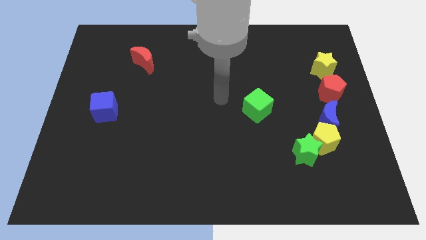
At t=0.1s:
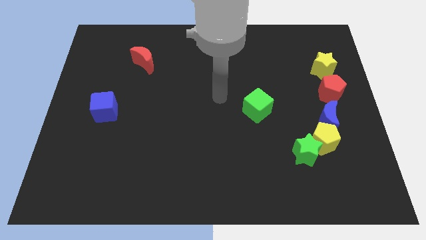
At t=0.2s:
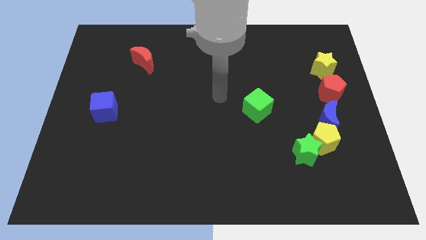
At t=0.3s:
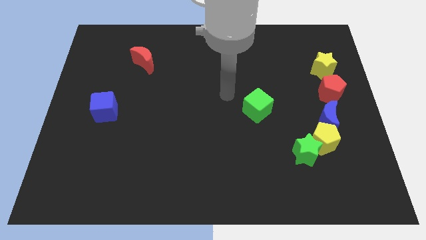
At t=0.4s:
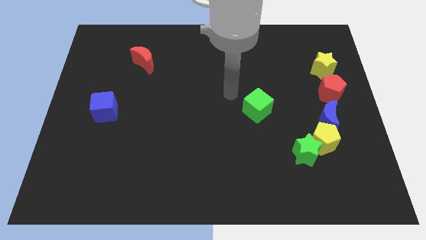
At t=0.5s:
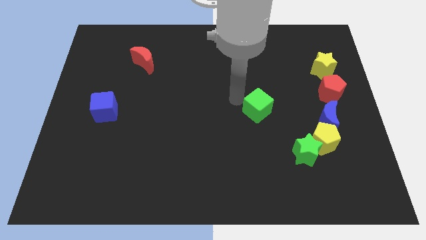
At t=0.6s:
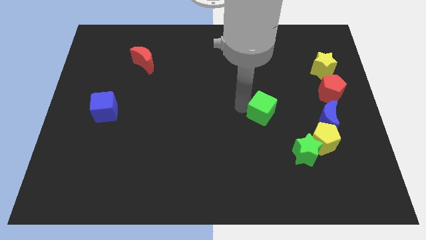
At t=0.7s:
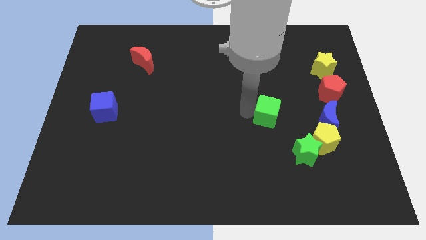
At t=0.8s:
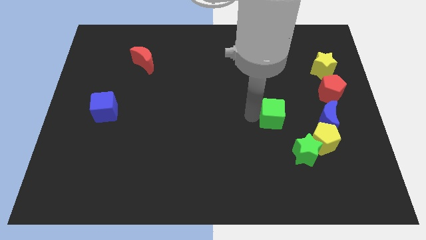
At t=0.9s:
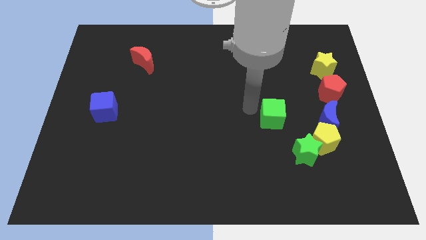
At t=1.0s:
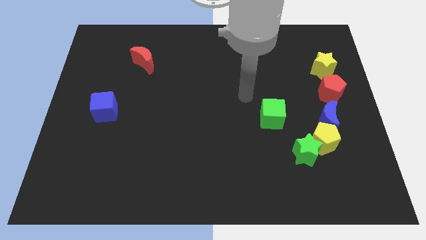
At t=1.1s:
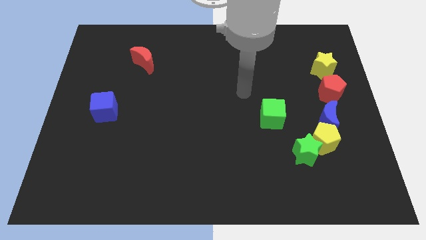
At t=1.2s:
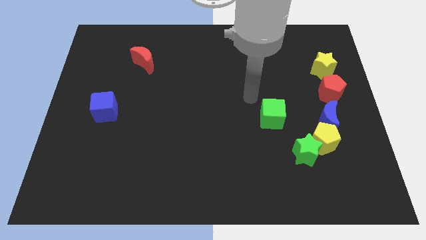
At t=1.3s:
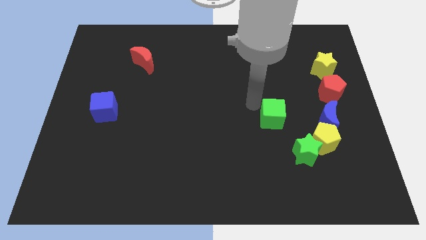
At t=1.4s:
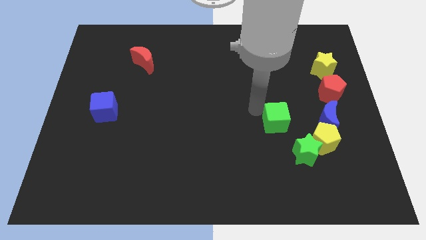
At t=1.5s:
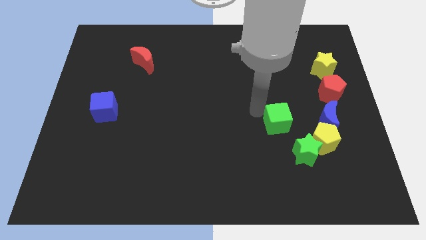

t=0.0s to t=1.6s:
place the green cube diagonally above the top left side of the green star

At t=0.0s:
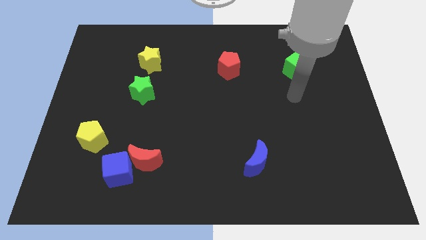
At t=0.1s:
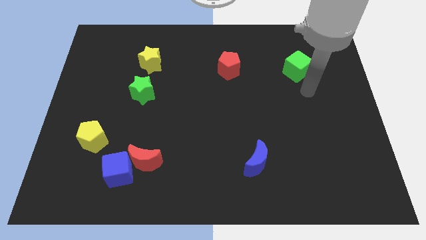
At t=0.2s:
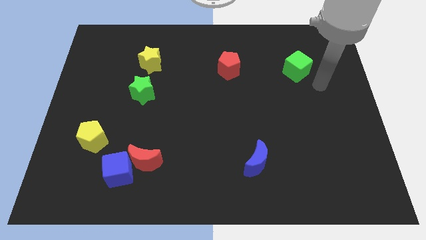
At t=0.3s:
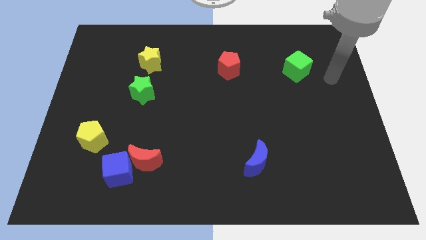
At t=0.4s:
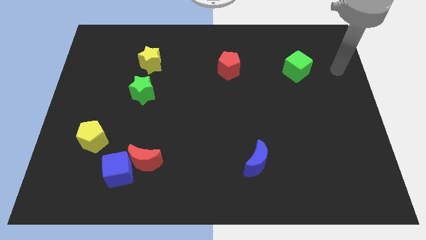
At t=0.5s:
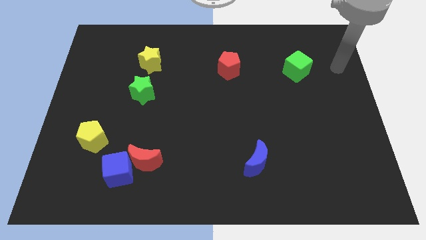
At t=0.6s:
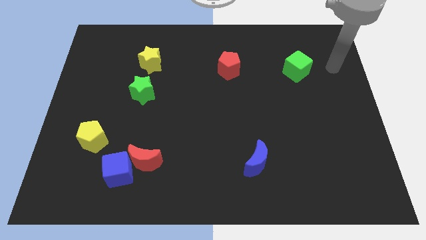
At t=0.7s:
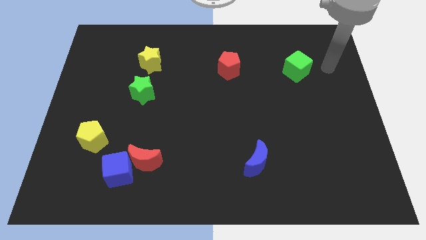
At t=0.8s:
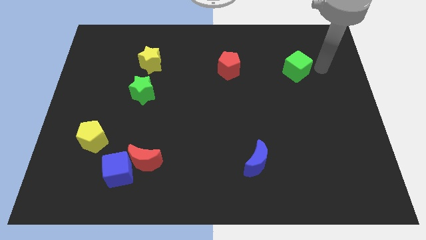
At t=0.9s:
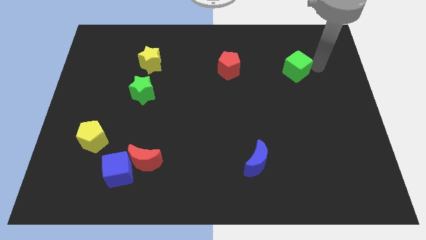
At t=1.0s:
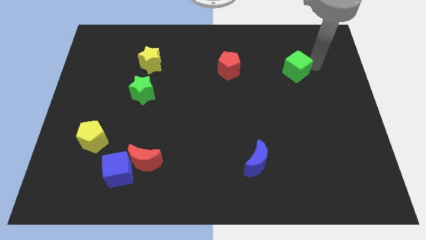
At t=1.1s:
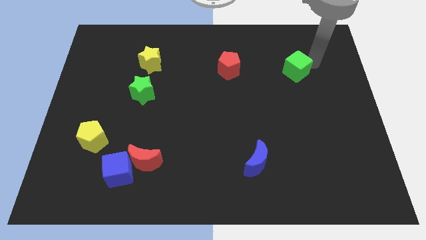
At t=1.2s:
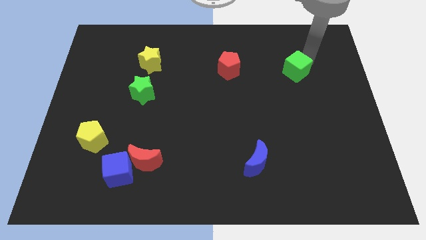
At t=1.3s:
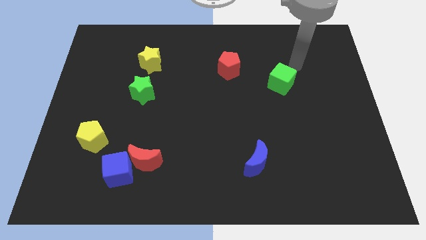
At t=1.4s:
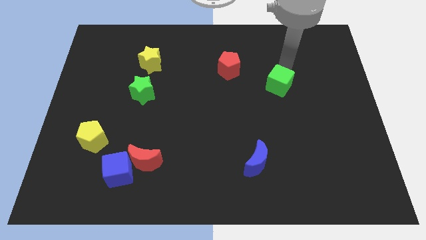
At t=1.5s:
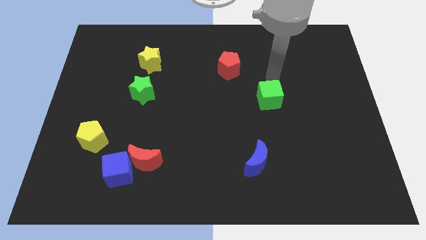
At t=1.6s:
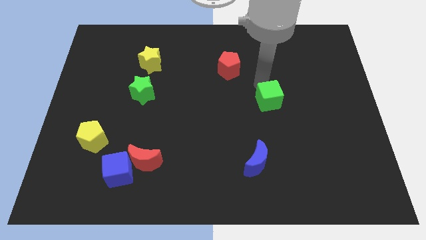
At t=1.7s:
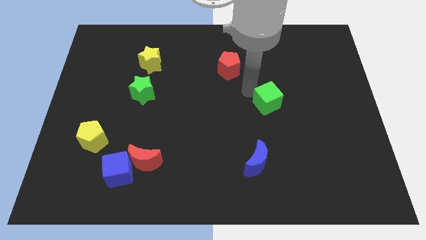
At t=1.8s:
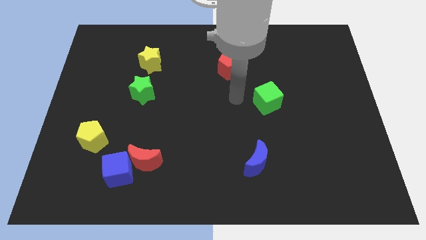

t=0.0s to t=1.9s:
move green cube diagonally on the bottom right side of the red pentagon

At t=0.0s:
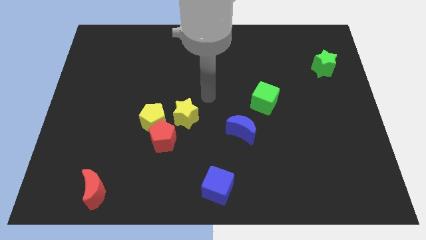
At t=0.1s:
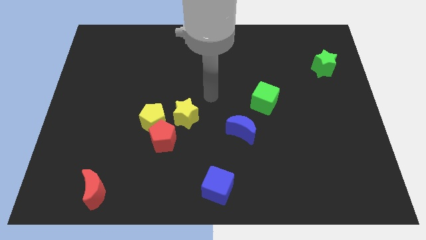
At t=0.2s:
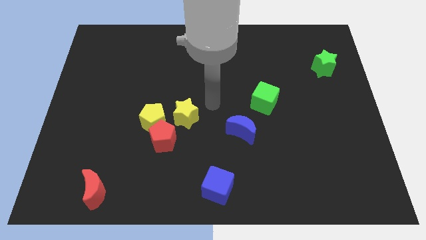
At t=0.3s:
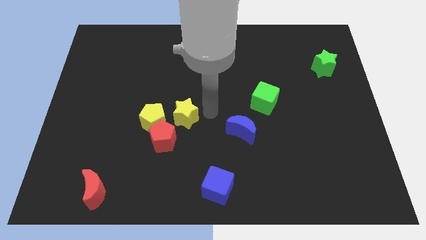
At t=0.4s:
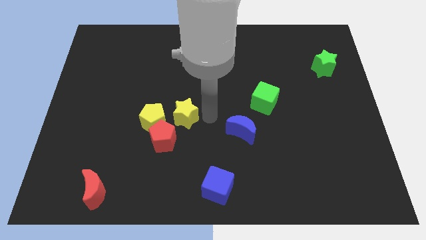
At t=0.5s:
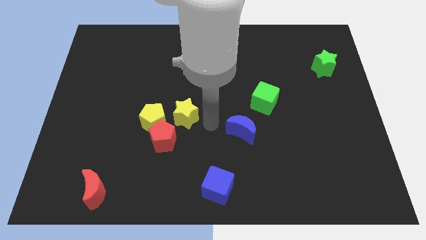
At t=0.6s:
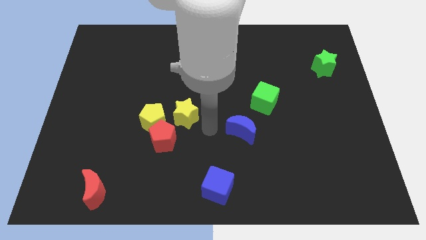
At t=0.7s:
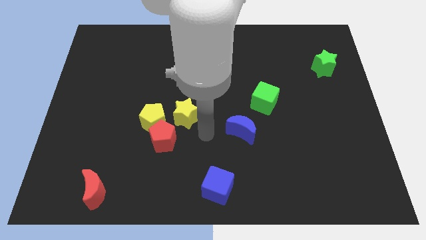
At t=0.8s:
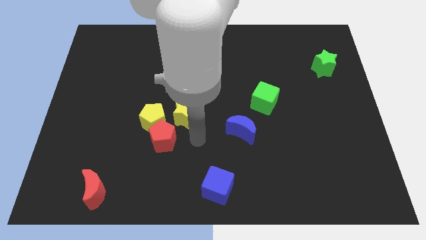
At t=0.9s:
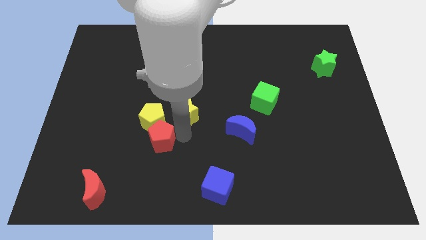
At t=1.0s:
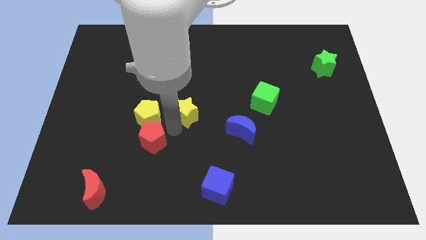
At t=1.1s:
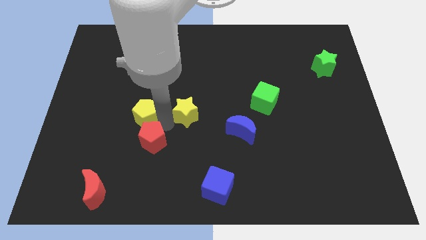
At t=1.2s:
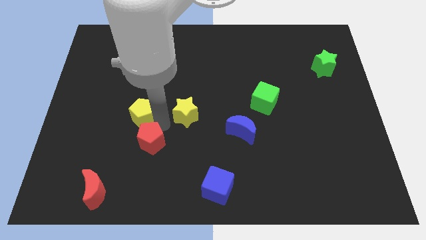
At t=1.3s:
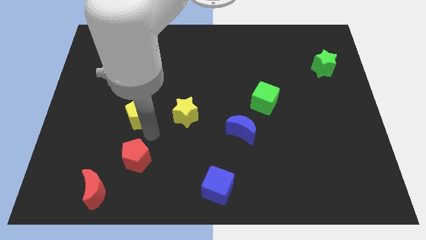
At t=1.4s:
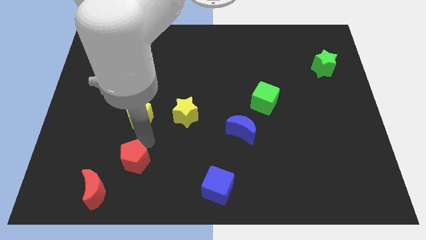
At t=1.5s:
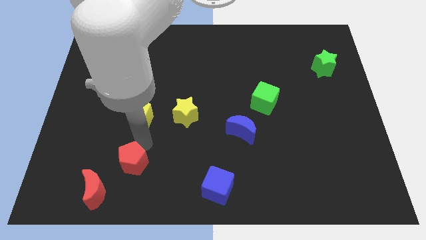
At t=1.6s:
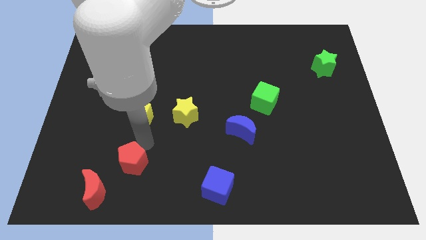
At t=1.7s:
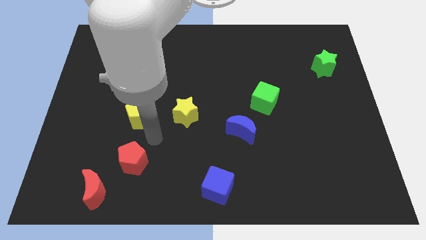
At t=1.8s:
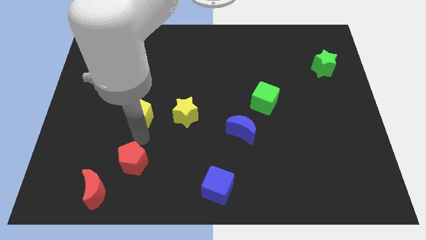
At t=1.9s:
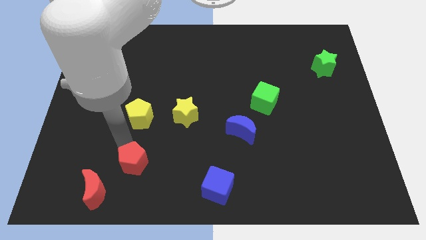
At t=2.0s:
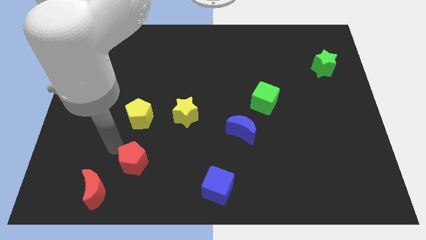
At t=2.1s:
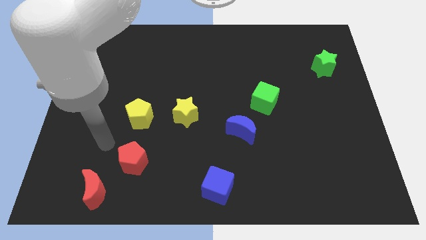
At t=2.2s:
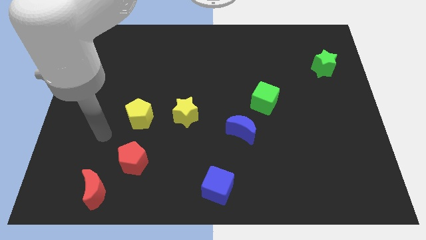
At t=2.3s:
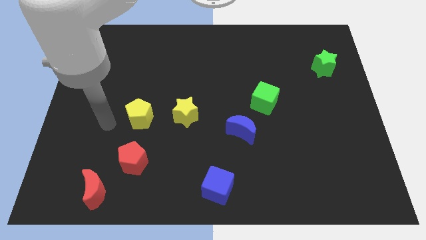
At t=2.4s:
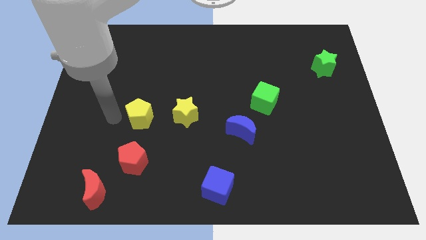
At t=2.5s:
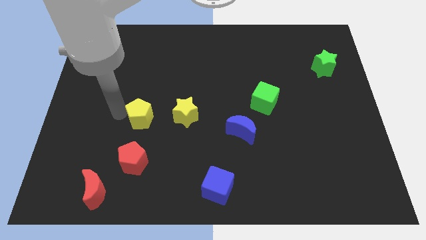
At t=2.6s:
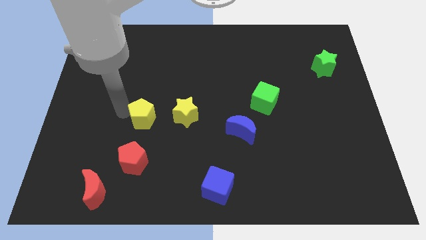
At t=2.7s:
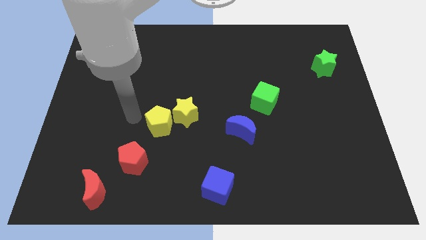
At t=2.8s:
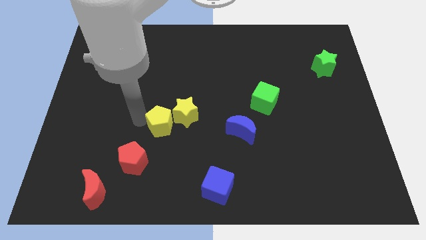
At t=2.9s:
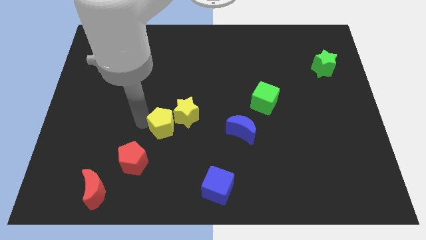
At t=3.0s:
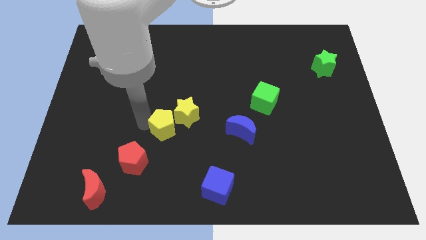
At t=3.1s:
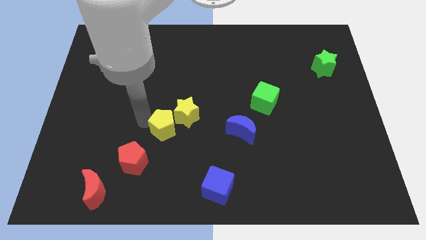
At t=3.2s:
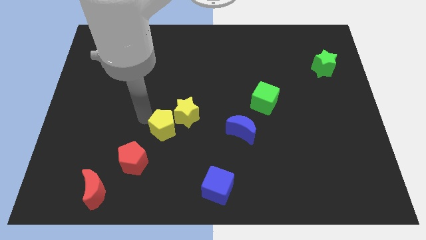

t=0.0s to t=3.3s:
place the yellow pentagon diagonally in between the yellow star and the red pentagon

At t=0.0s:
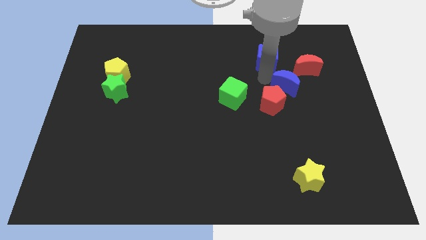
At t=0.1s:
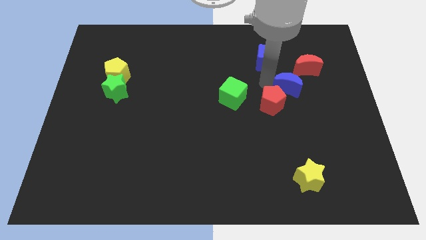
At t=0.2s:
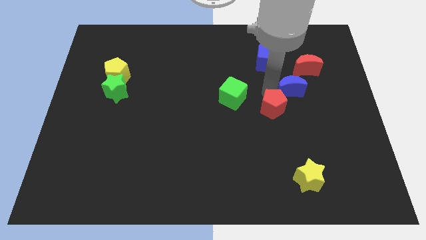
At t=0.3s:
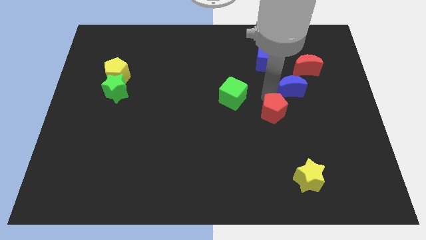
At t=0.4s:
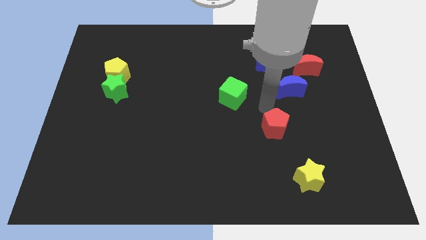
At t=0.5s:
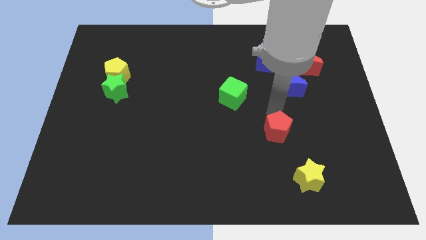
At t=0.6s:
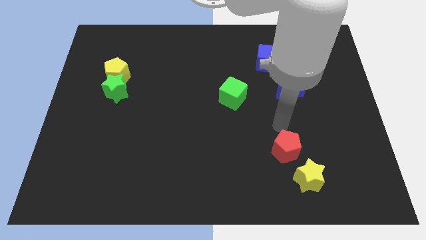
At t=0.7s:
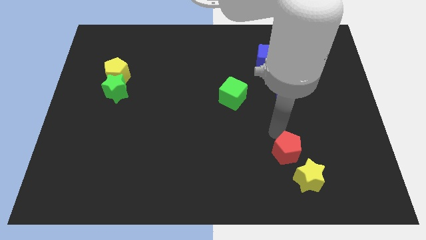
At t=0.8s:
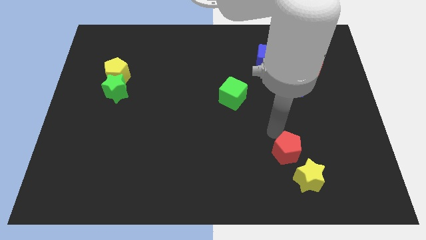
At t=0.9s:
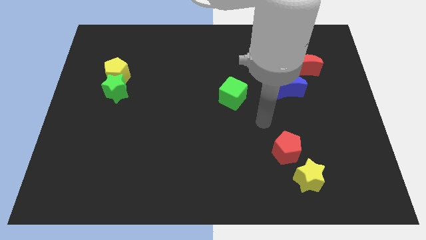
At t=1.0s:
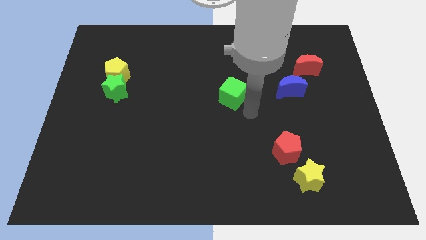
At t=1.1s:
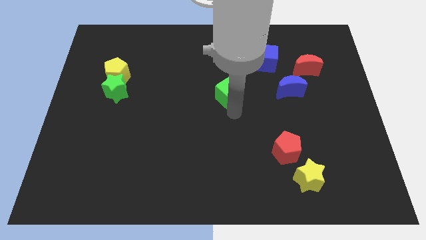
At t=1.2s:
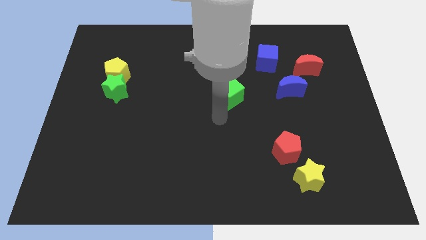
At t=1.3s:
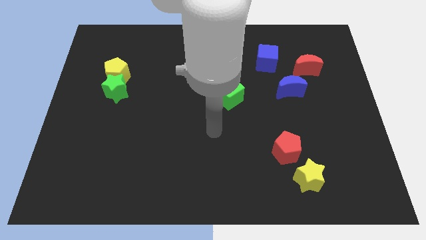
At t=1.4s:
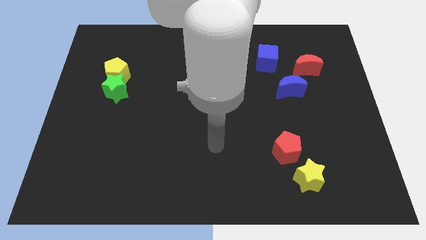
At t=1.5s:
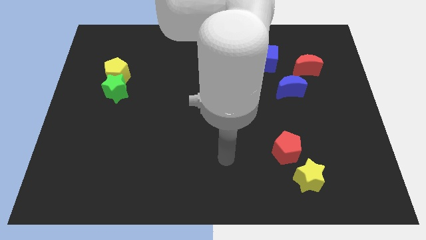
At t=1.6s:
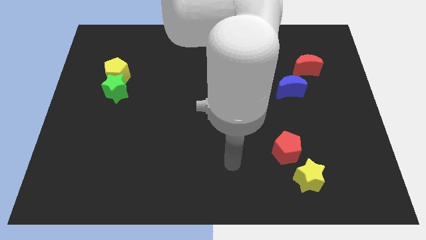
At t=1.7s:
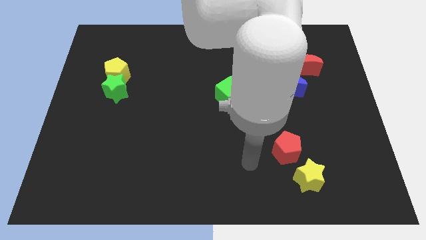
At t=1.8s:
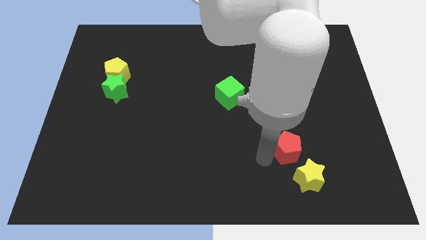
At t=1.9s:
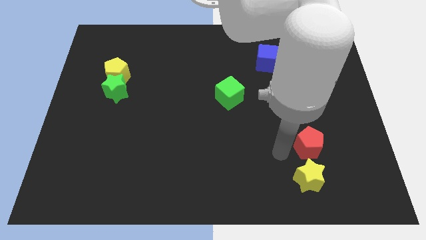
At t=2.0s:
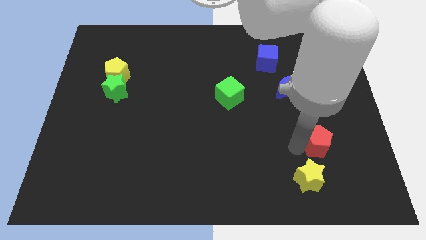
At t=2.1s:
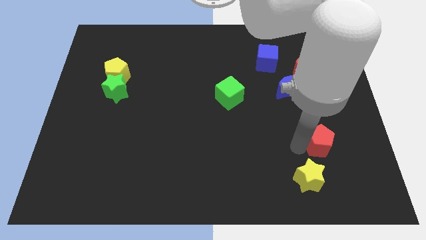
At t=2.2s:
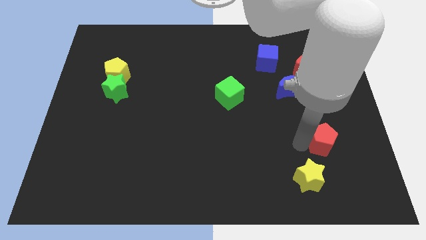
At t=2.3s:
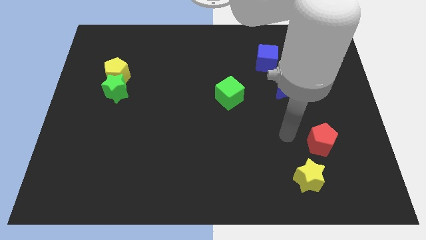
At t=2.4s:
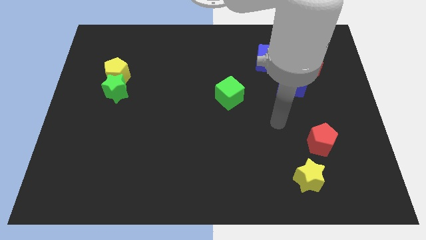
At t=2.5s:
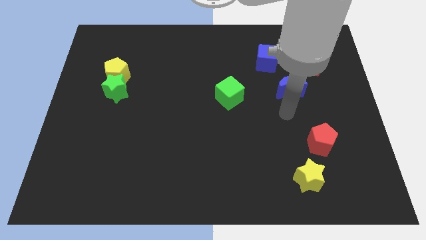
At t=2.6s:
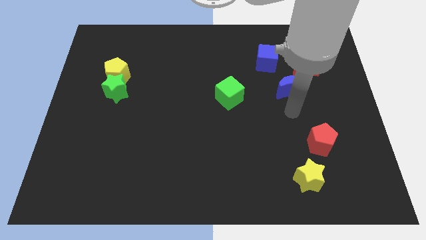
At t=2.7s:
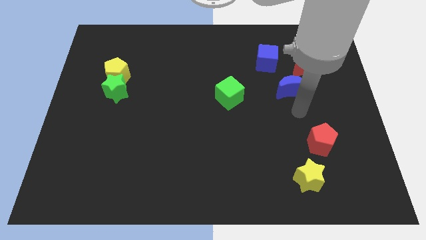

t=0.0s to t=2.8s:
place the red pentagon diagonally top right to yellow star
